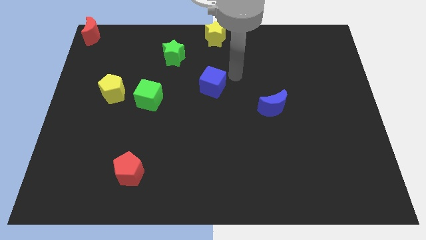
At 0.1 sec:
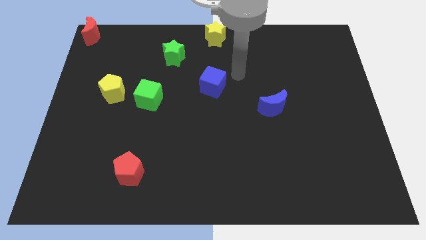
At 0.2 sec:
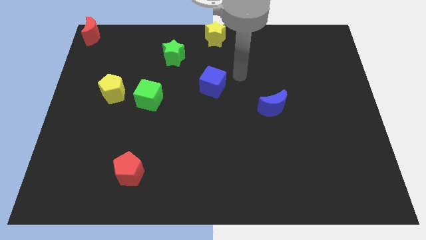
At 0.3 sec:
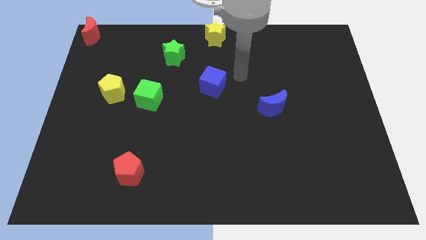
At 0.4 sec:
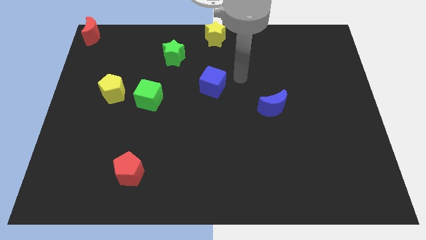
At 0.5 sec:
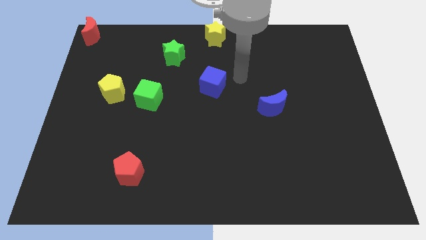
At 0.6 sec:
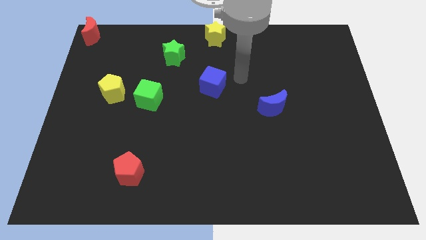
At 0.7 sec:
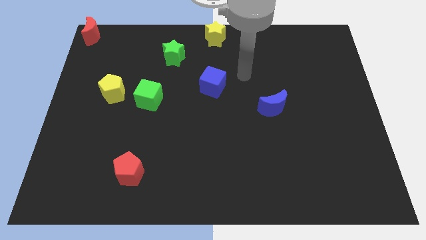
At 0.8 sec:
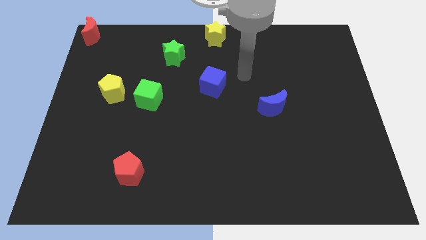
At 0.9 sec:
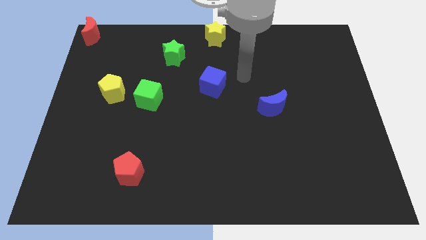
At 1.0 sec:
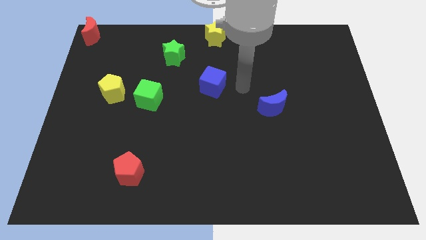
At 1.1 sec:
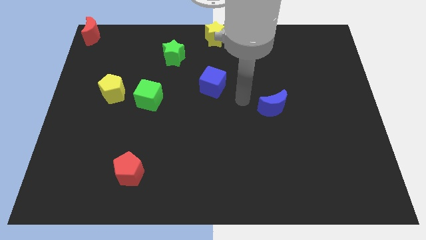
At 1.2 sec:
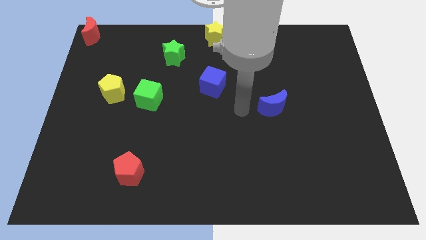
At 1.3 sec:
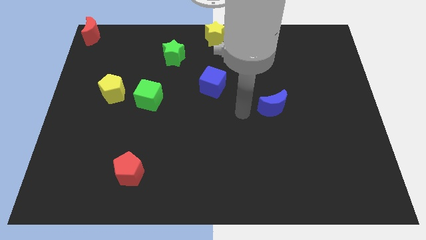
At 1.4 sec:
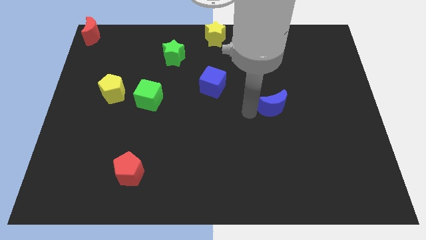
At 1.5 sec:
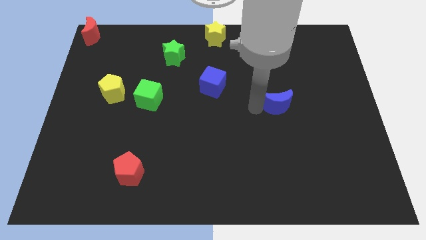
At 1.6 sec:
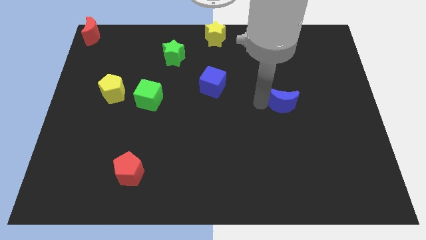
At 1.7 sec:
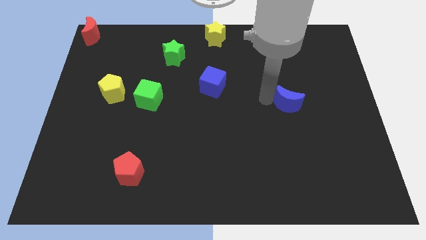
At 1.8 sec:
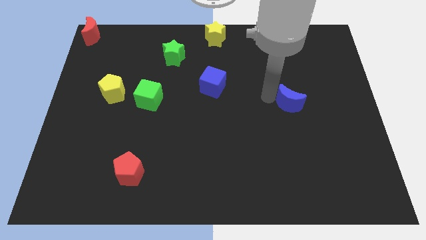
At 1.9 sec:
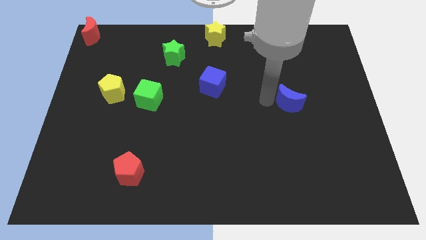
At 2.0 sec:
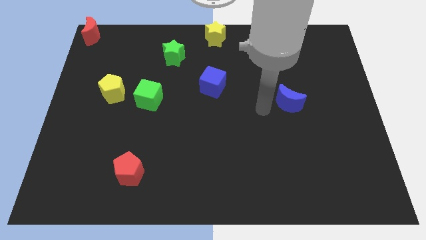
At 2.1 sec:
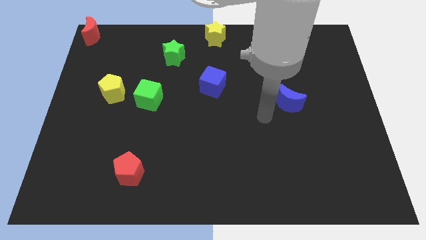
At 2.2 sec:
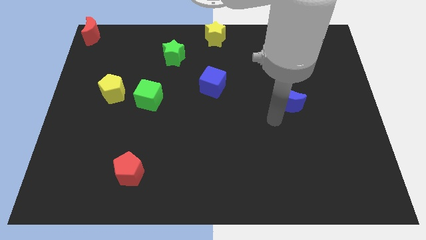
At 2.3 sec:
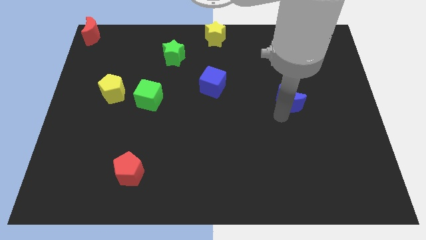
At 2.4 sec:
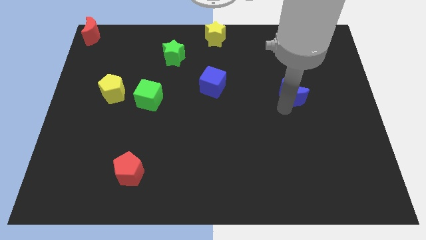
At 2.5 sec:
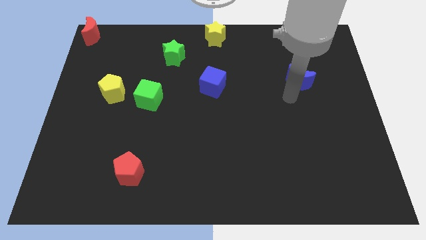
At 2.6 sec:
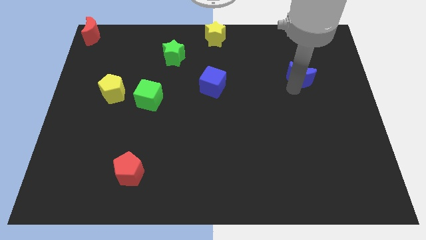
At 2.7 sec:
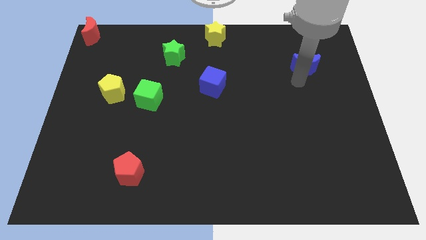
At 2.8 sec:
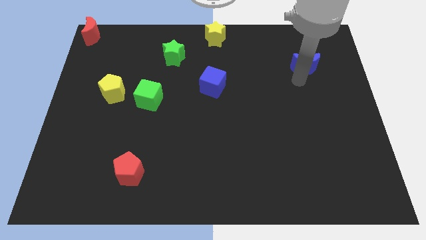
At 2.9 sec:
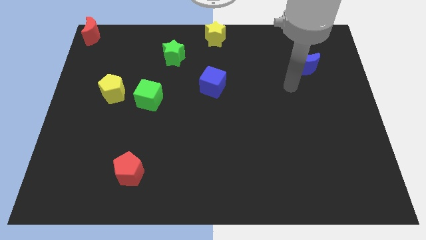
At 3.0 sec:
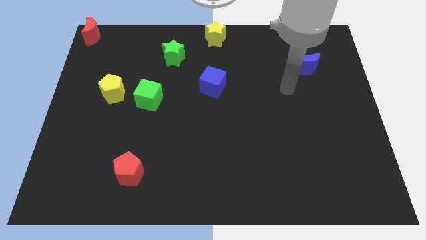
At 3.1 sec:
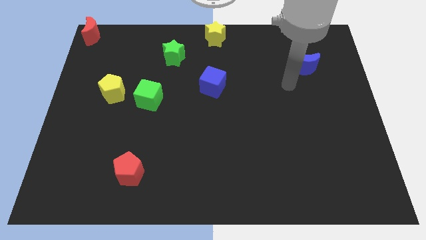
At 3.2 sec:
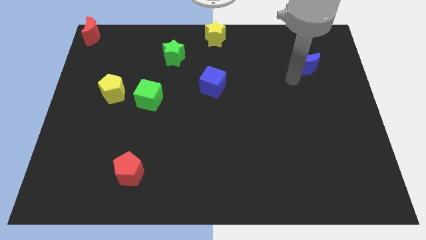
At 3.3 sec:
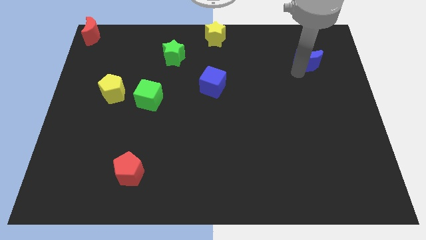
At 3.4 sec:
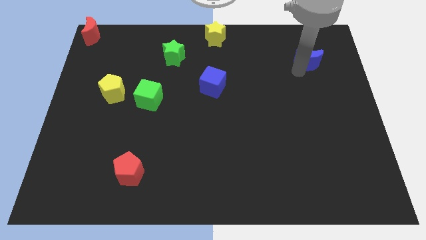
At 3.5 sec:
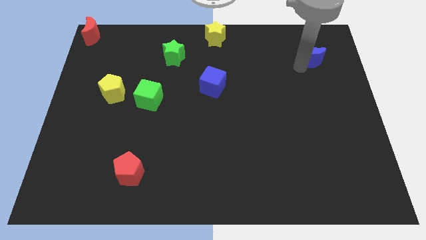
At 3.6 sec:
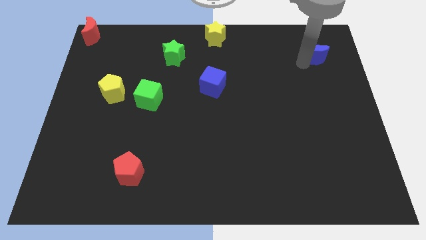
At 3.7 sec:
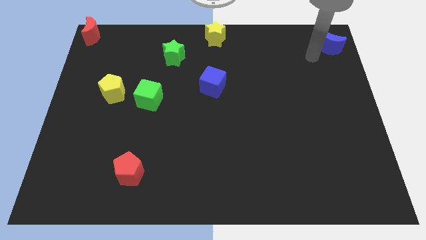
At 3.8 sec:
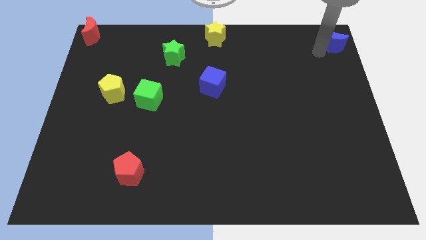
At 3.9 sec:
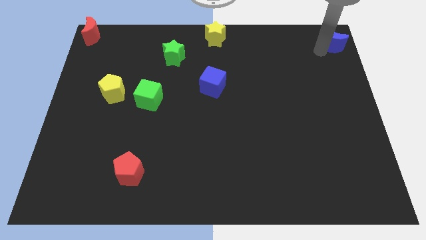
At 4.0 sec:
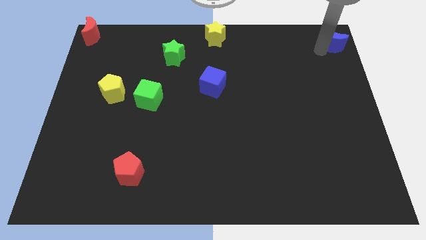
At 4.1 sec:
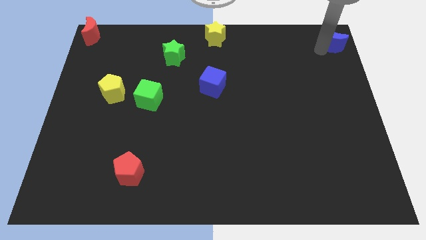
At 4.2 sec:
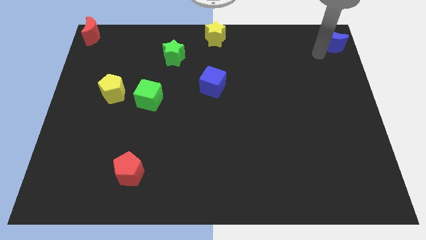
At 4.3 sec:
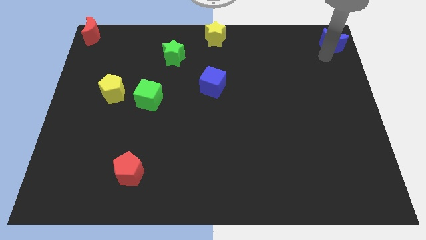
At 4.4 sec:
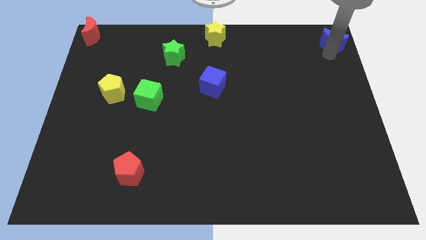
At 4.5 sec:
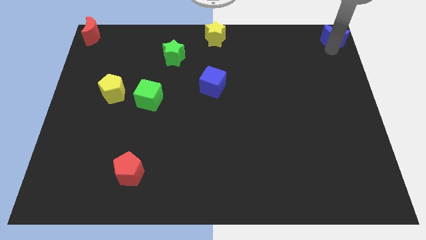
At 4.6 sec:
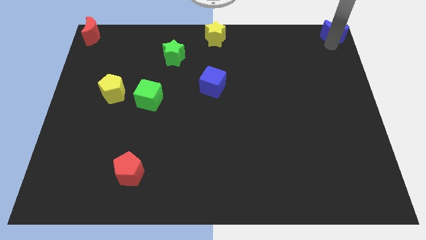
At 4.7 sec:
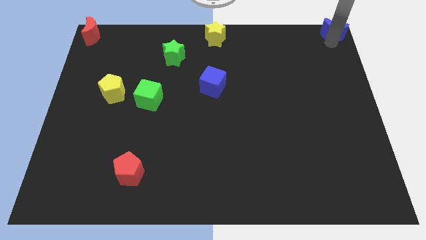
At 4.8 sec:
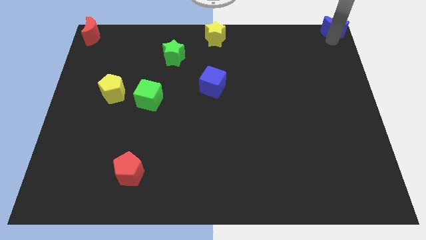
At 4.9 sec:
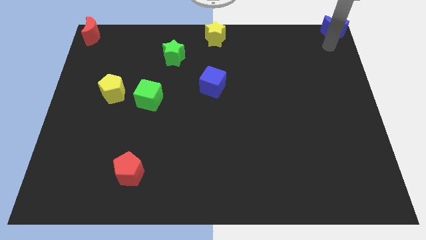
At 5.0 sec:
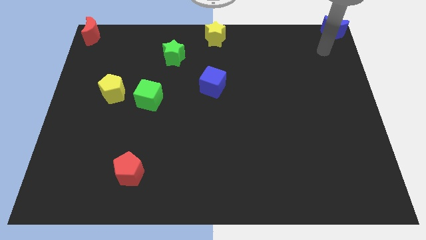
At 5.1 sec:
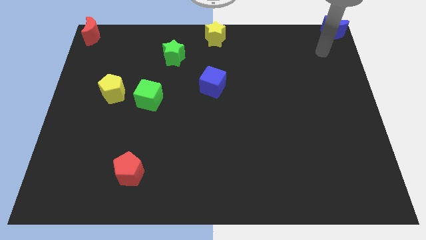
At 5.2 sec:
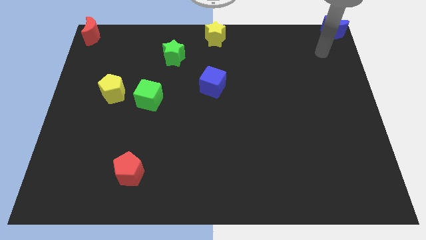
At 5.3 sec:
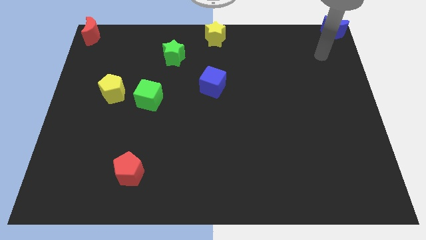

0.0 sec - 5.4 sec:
move the blue crescent to the top right corner of the board

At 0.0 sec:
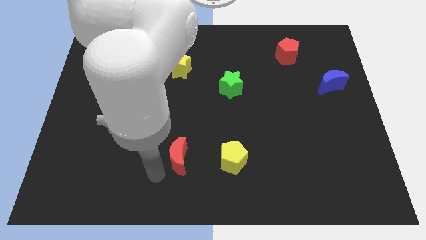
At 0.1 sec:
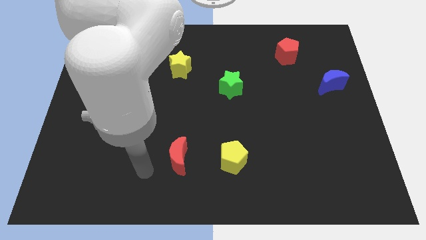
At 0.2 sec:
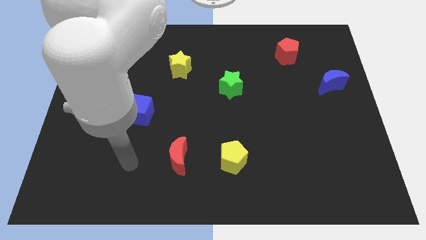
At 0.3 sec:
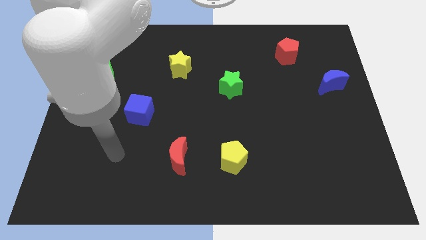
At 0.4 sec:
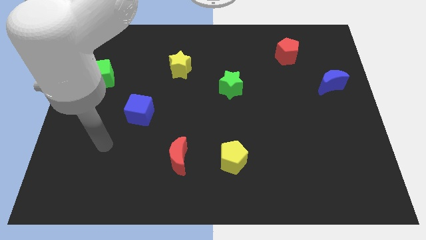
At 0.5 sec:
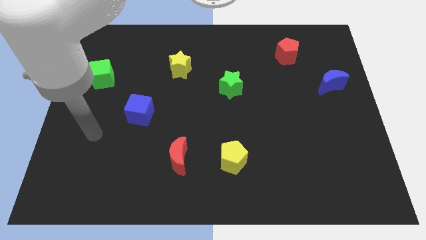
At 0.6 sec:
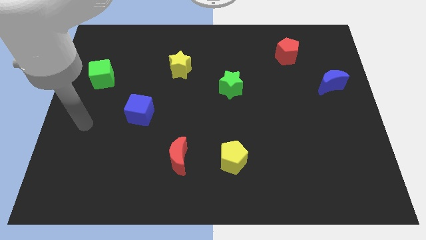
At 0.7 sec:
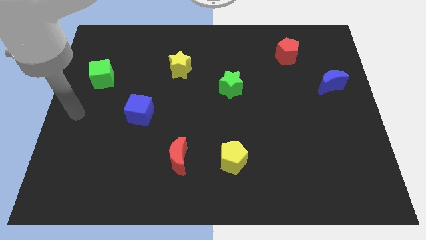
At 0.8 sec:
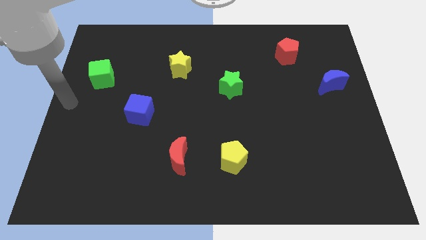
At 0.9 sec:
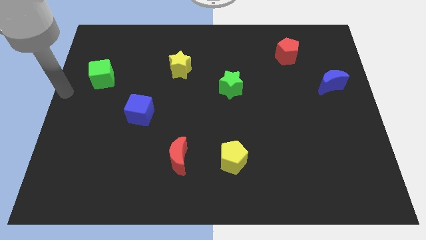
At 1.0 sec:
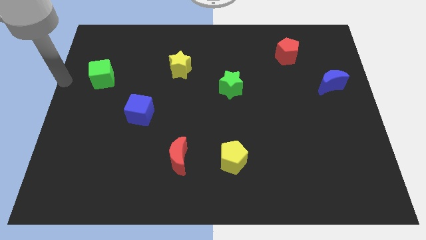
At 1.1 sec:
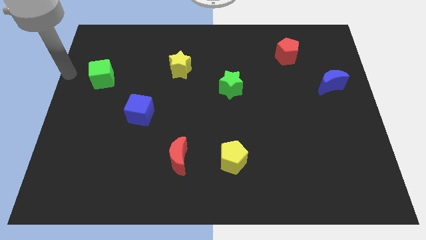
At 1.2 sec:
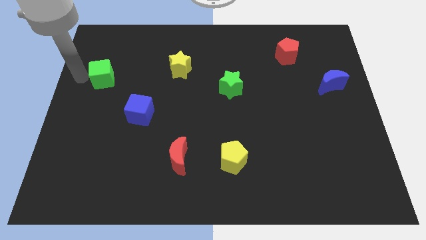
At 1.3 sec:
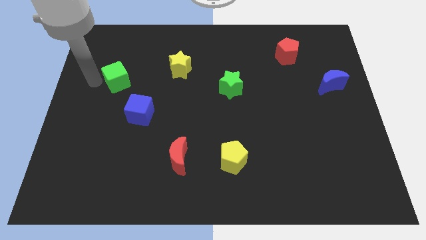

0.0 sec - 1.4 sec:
tap the green cube

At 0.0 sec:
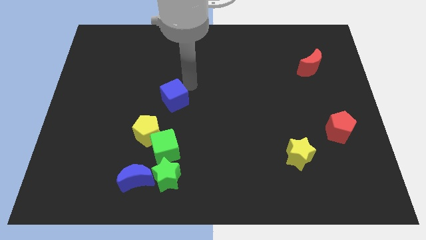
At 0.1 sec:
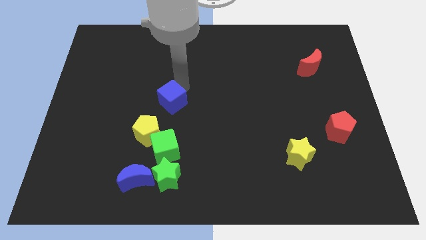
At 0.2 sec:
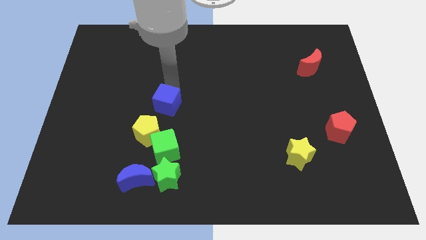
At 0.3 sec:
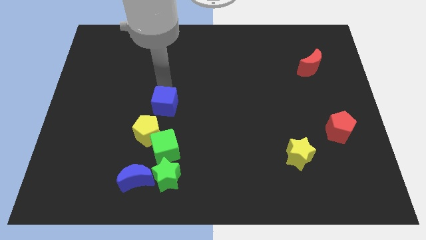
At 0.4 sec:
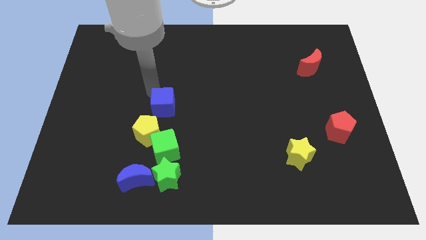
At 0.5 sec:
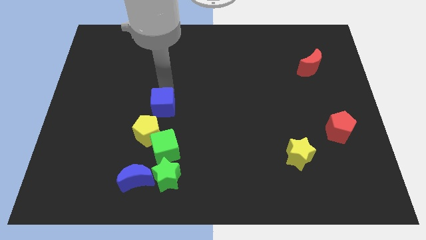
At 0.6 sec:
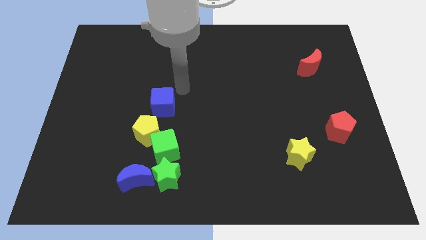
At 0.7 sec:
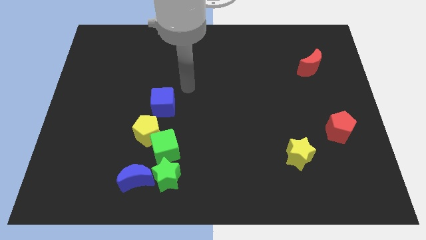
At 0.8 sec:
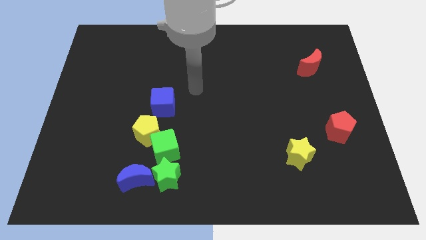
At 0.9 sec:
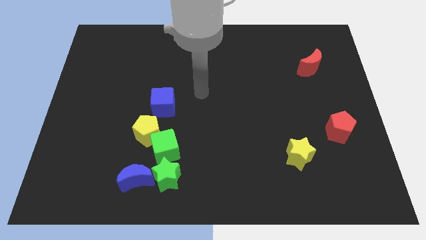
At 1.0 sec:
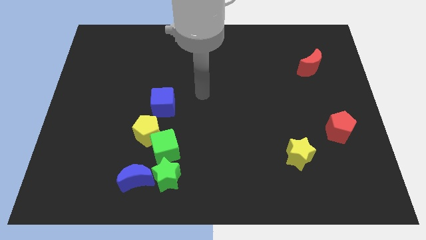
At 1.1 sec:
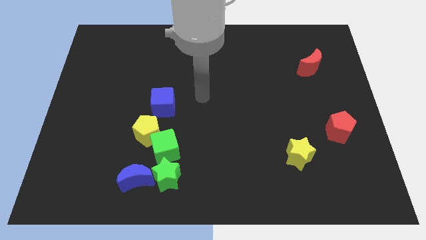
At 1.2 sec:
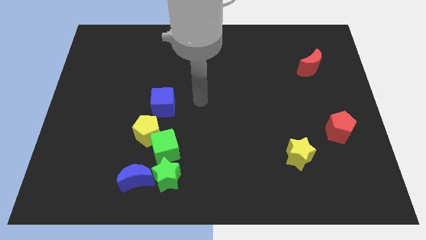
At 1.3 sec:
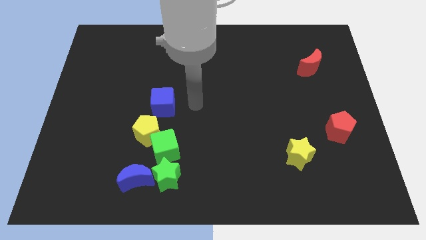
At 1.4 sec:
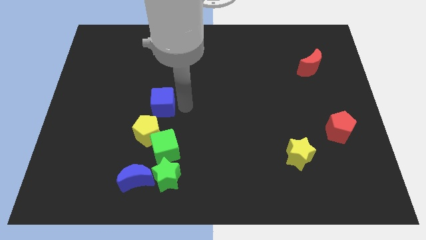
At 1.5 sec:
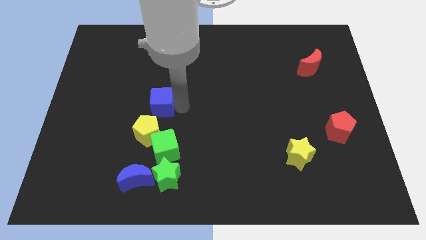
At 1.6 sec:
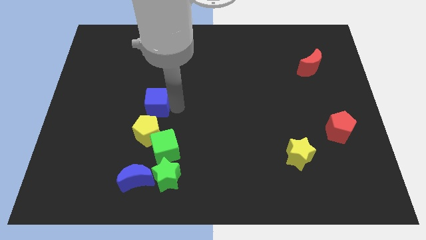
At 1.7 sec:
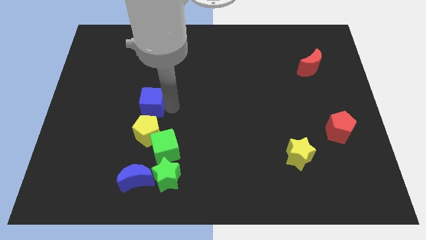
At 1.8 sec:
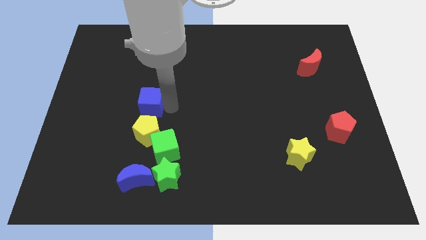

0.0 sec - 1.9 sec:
place the blue cube above the yellow pentagon
